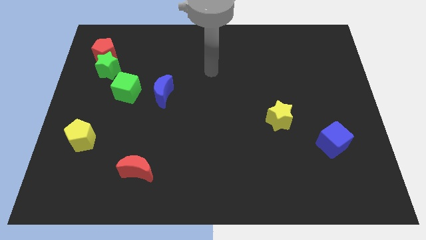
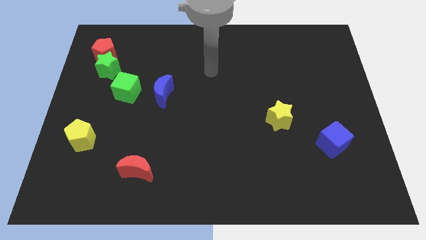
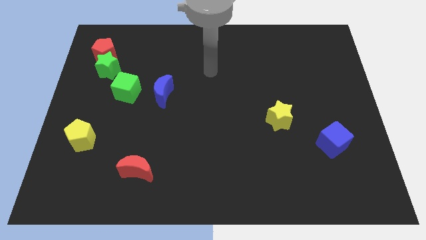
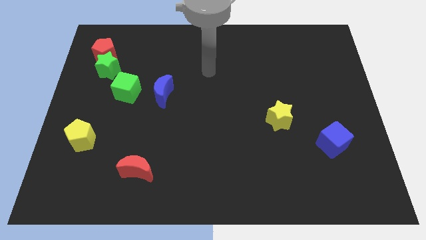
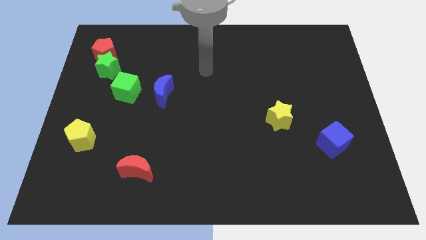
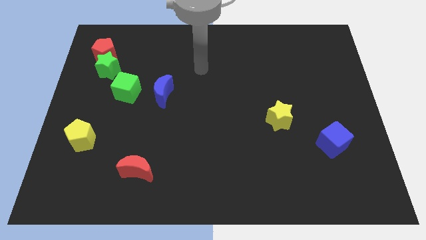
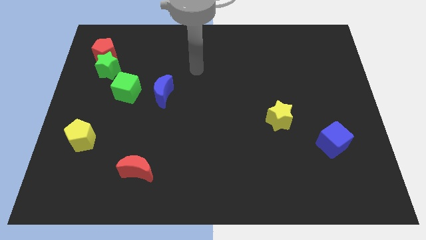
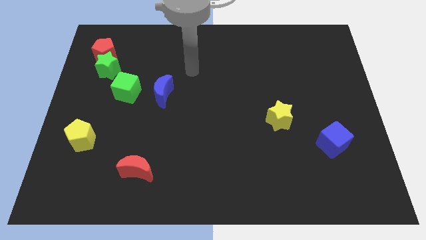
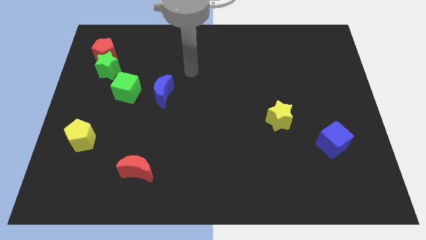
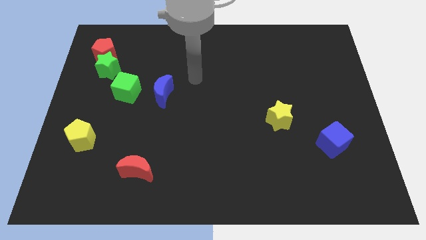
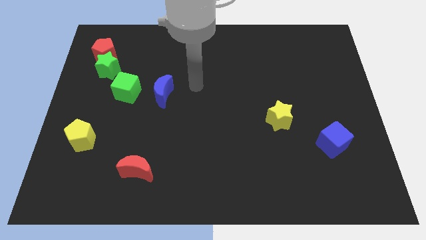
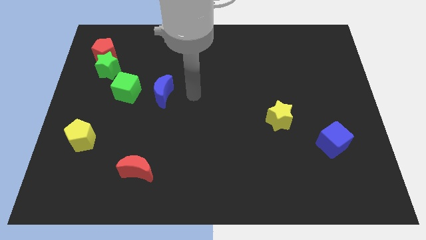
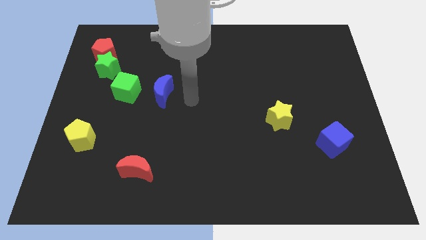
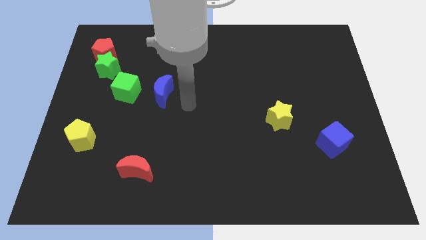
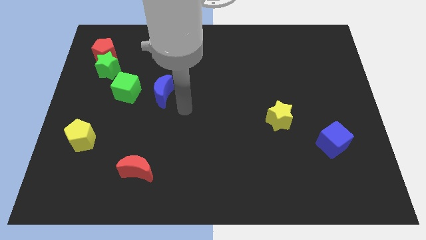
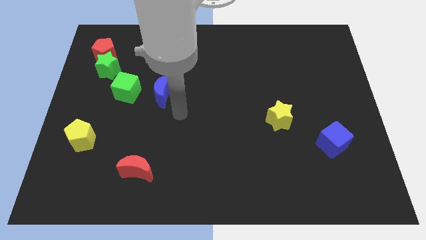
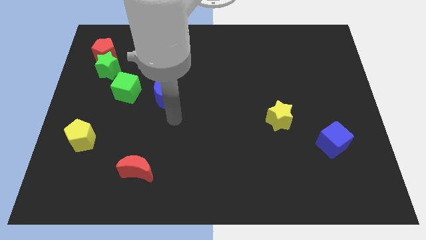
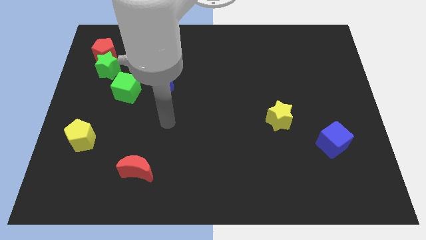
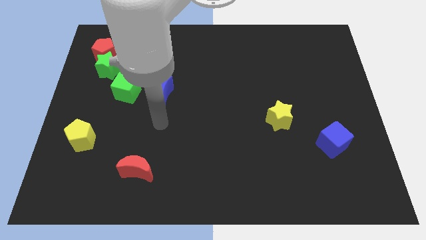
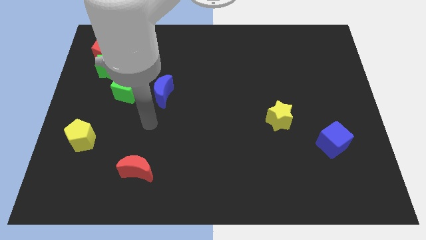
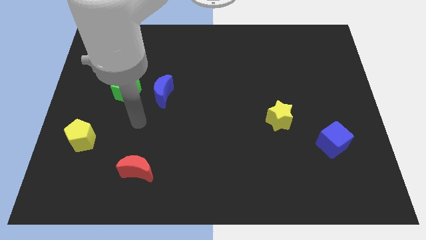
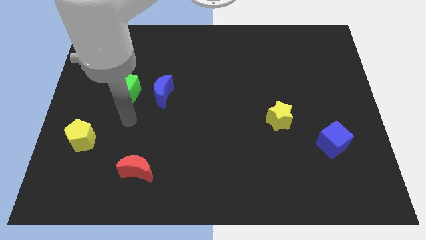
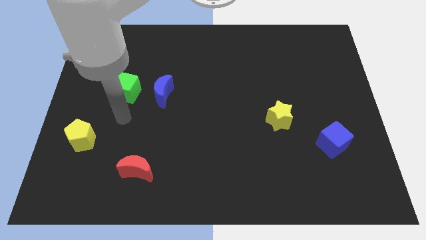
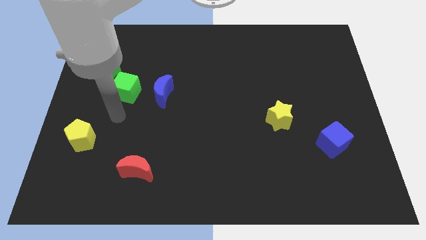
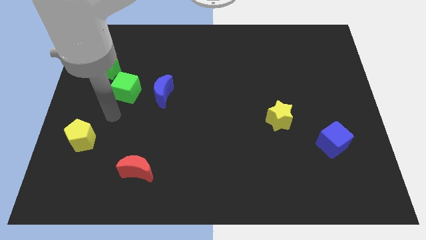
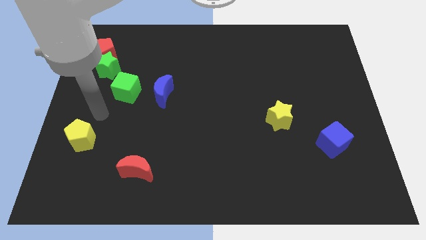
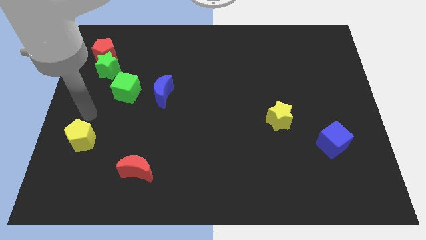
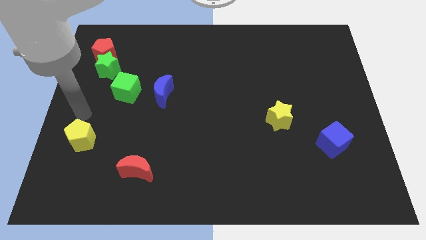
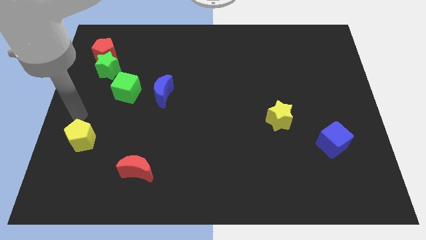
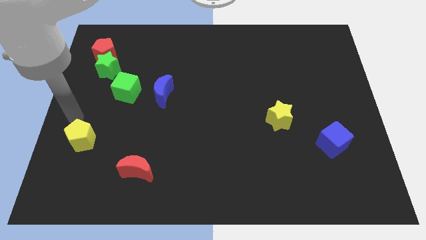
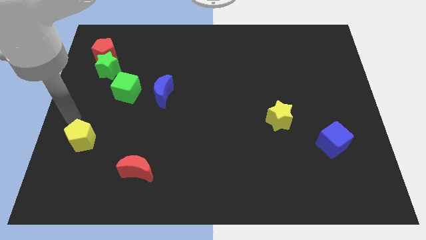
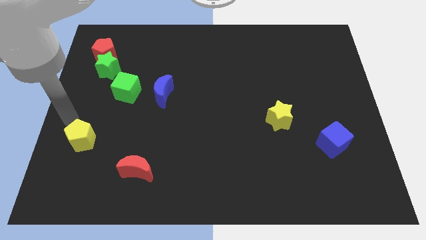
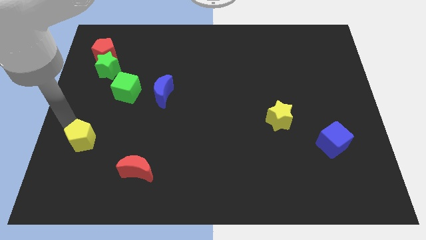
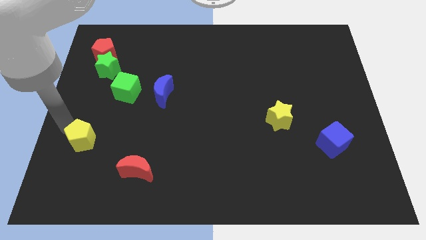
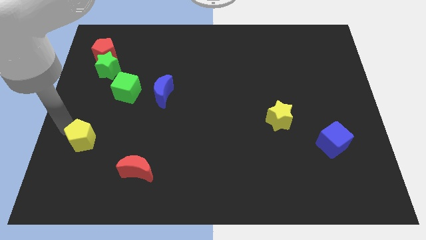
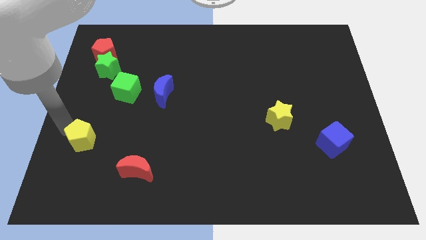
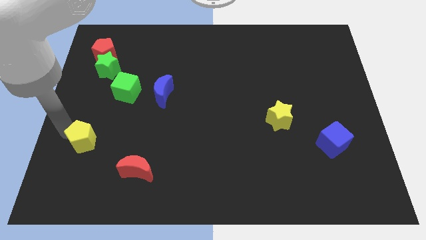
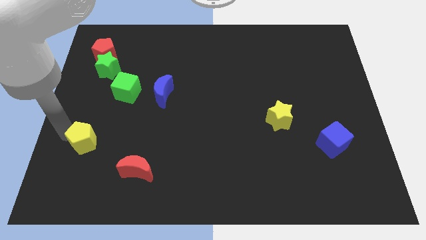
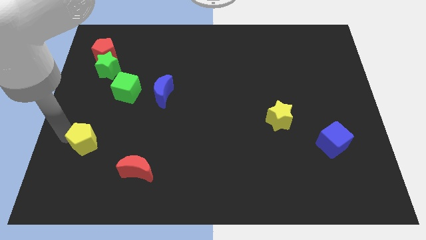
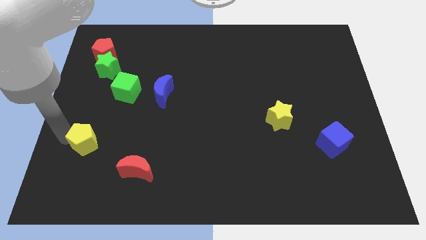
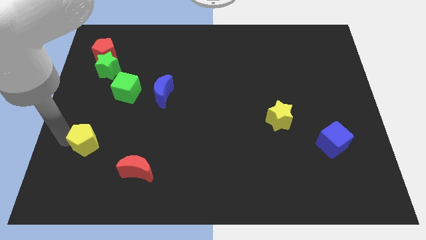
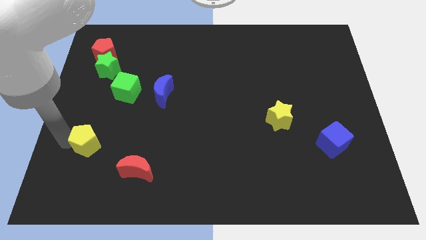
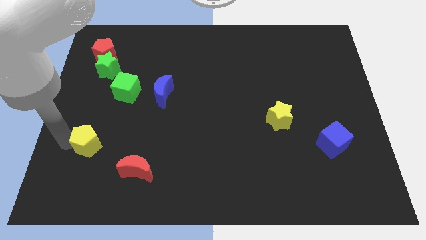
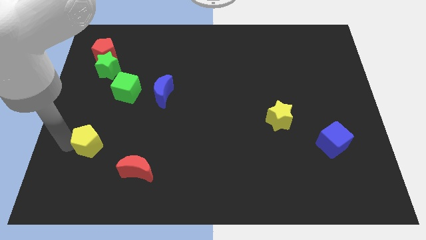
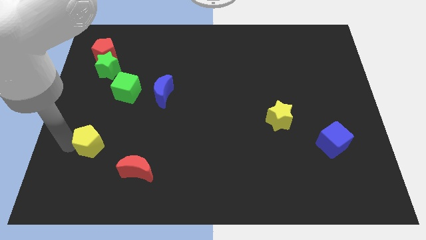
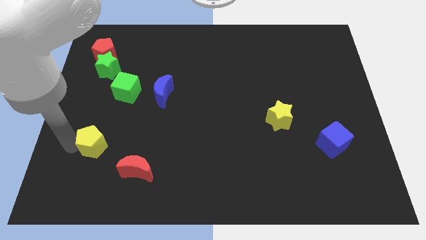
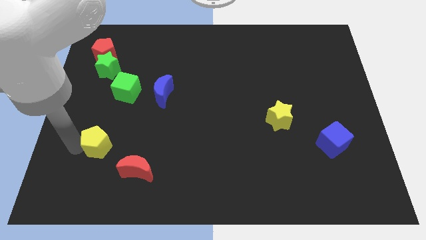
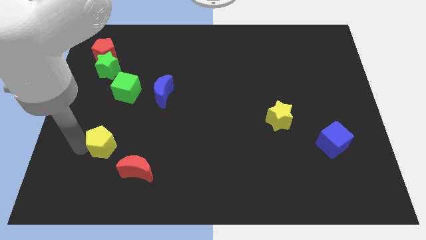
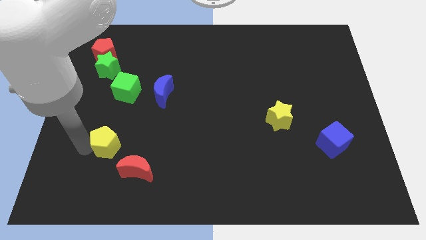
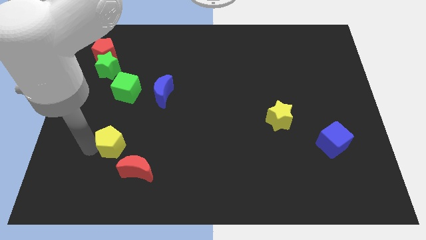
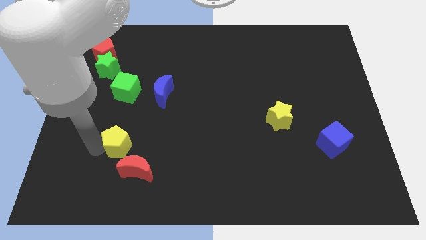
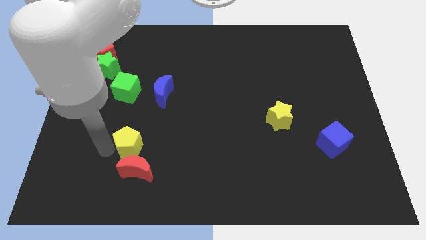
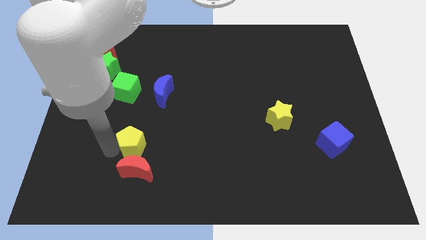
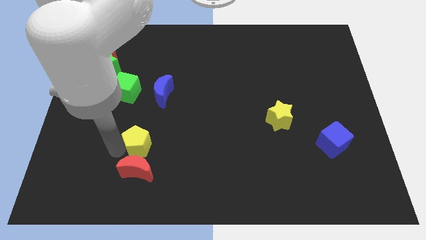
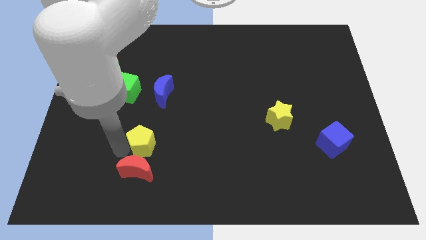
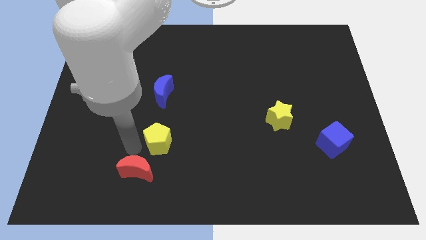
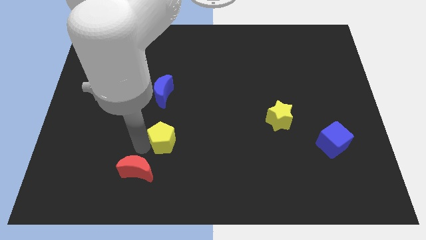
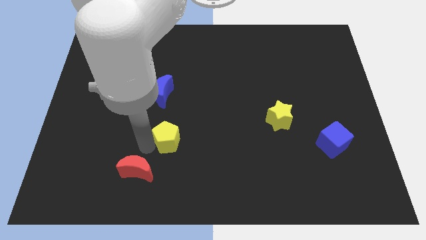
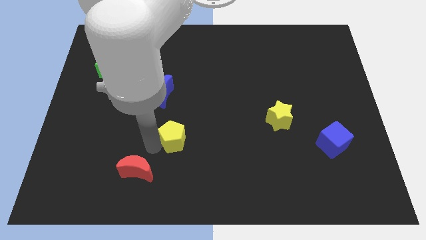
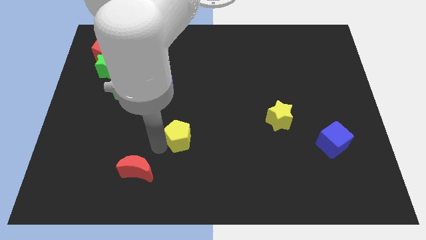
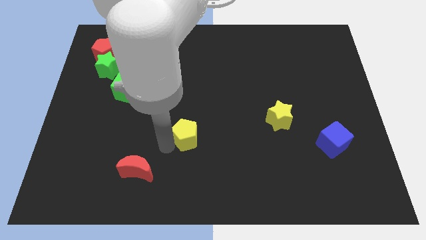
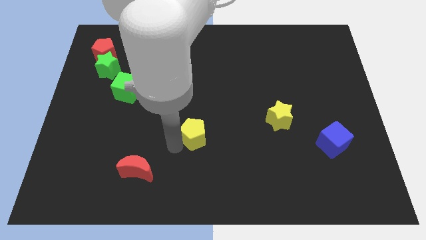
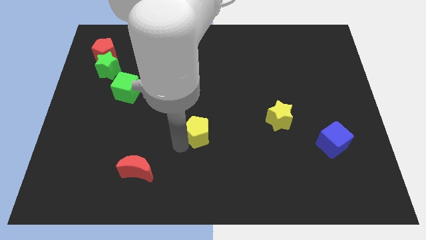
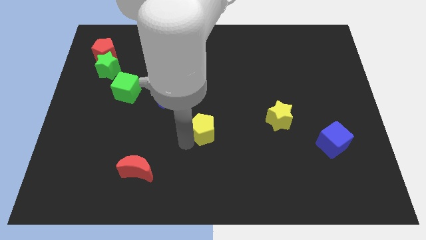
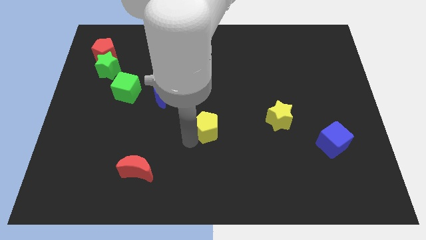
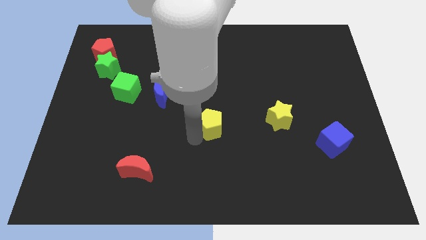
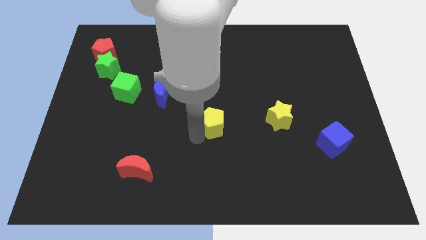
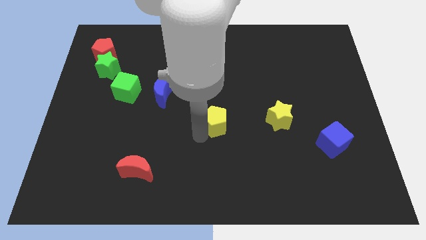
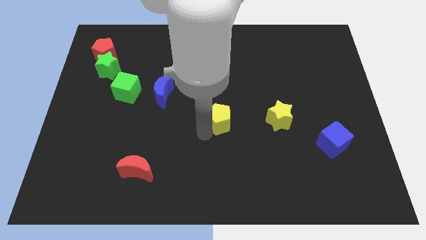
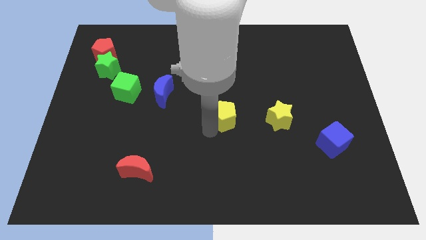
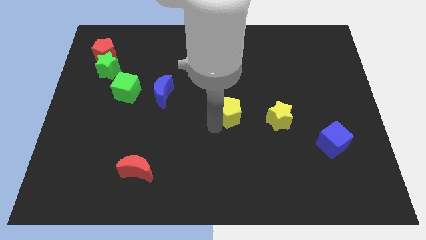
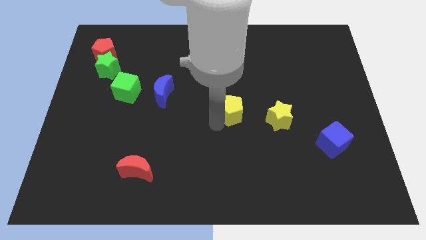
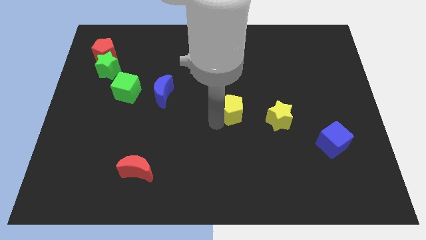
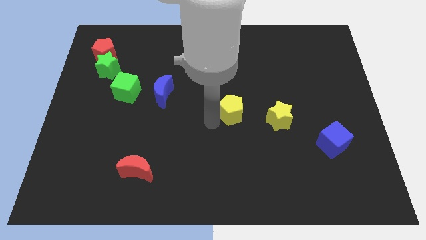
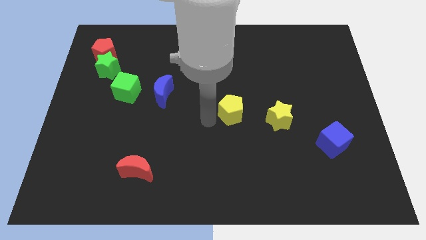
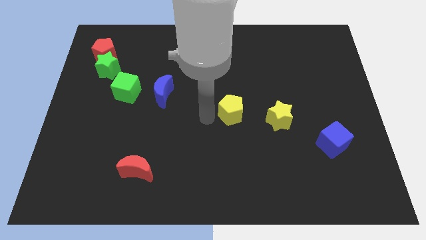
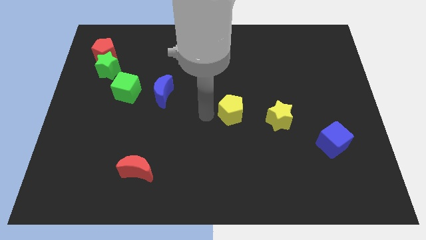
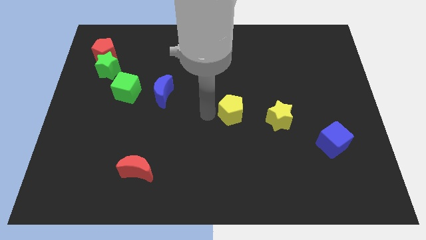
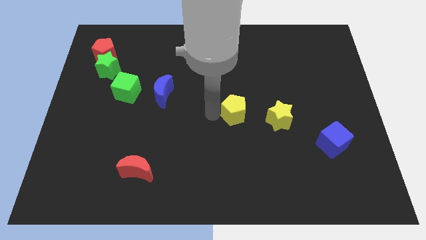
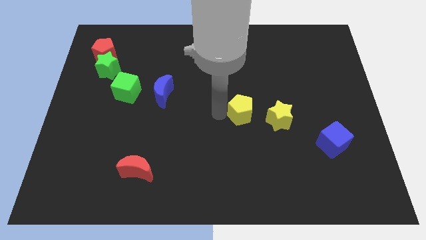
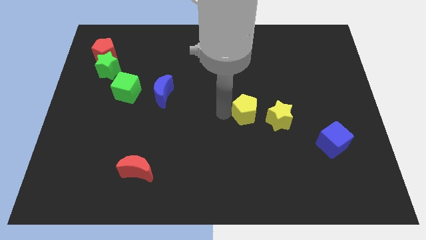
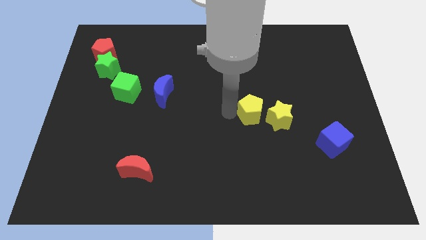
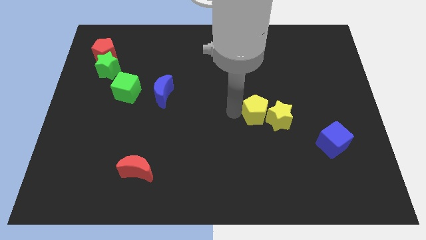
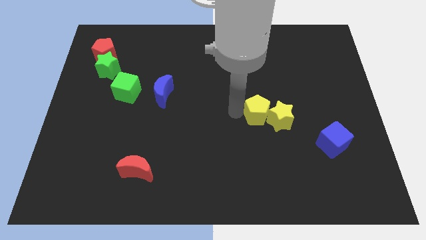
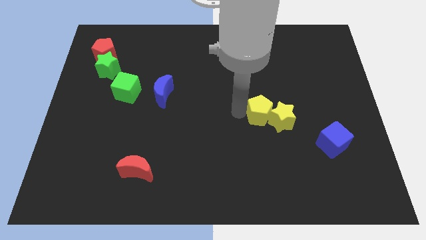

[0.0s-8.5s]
slide the yellow pentagon towards the yellow star

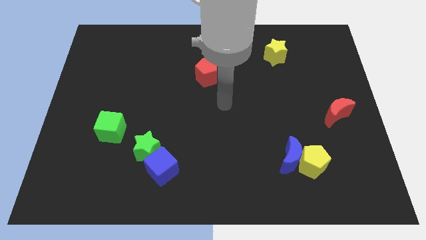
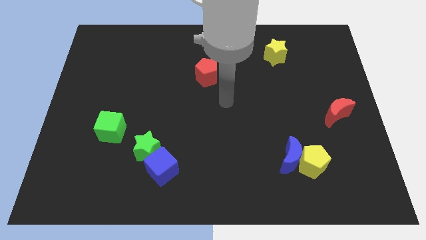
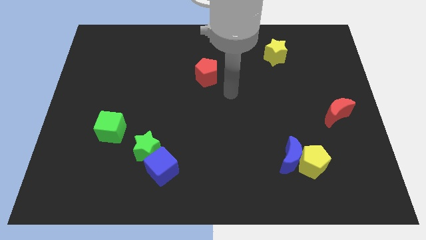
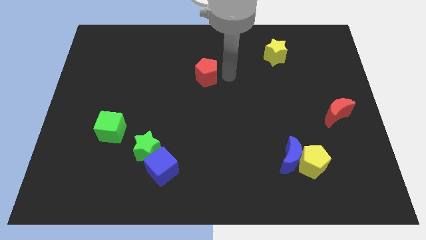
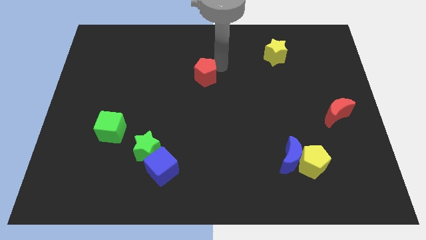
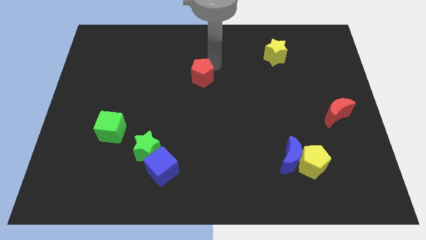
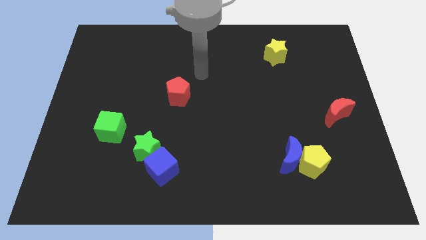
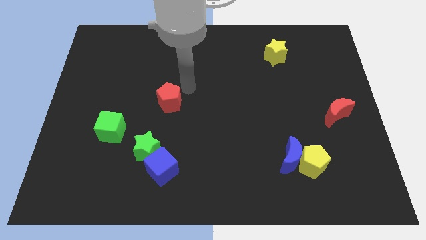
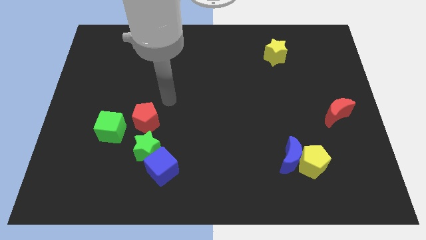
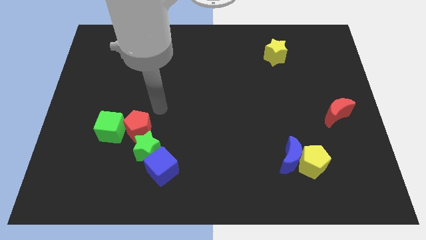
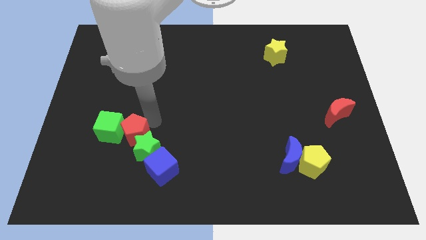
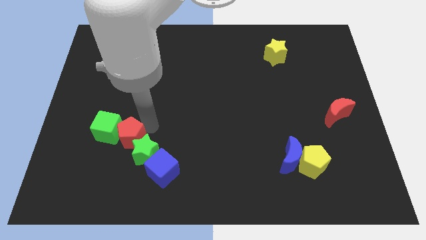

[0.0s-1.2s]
slide the red pentagon to the green star
